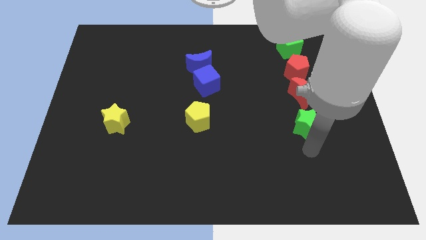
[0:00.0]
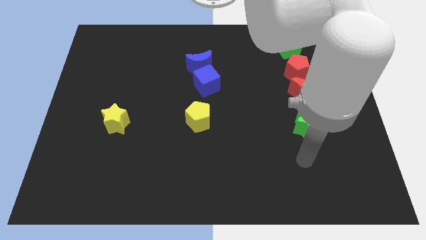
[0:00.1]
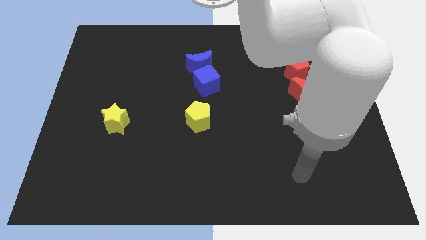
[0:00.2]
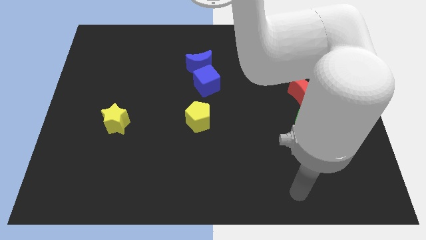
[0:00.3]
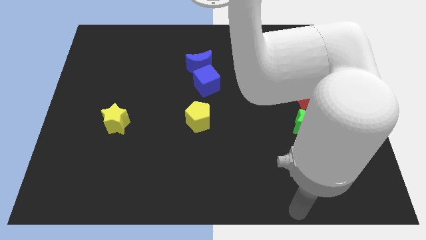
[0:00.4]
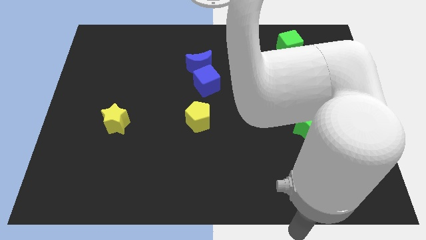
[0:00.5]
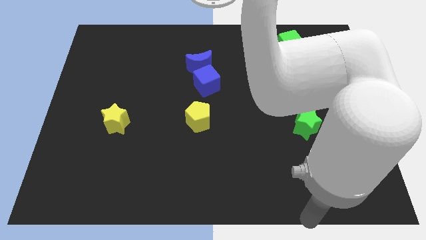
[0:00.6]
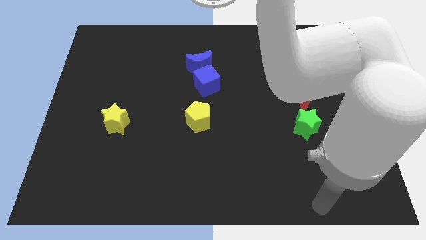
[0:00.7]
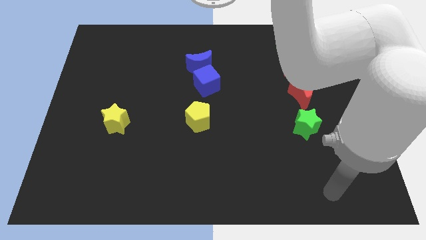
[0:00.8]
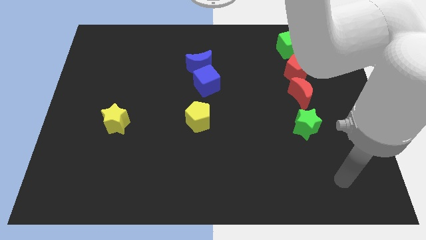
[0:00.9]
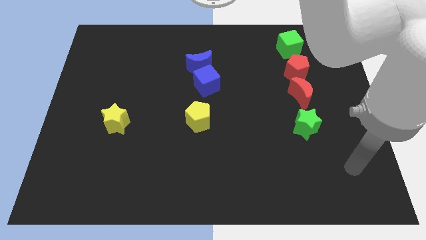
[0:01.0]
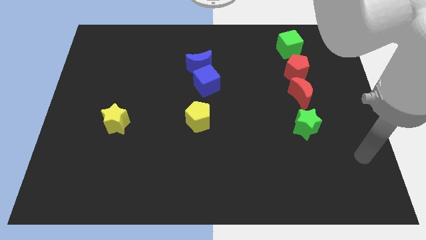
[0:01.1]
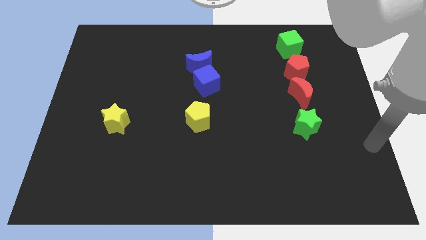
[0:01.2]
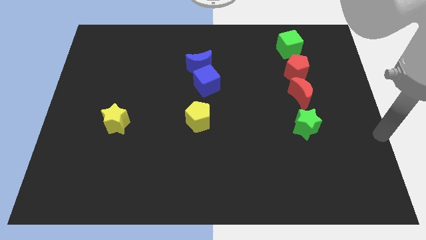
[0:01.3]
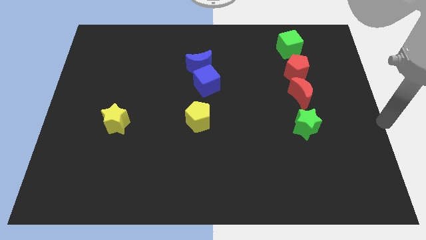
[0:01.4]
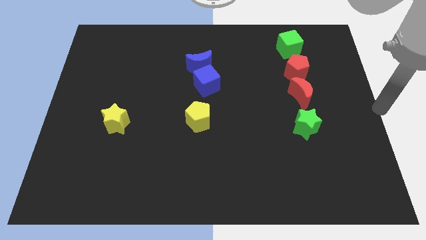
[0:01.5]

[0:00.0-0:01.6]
move your arm to center right

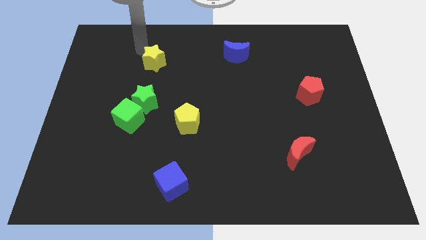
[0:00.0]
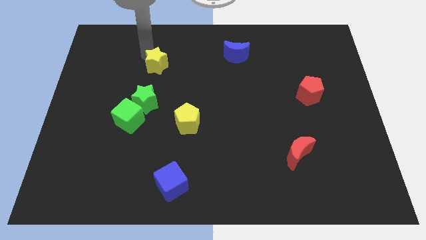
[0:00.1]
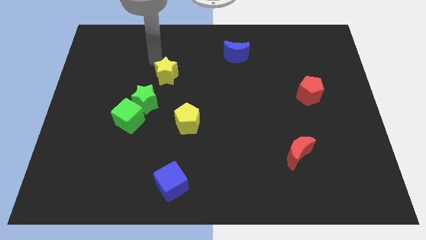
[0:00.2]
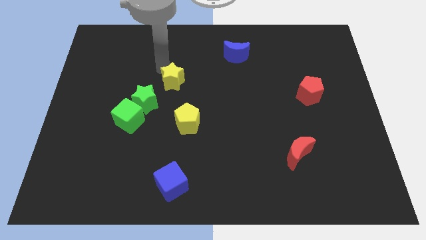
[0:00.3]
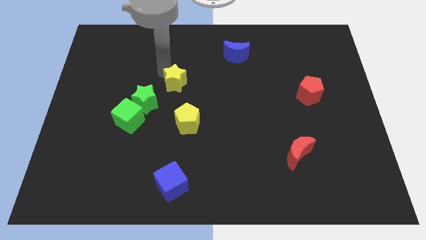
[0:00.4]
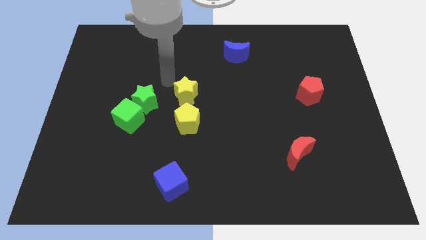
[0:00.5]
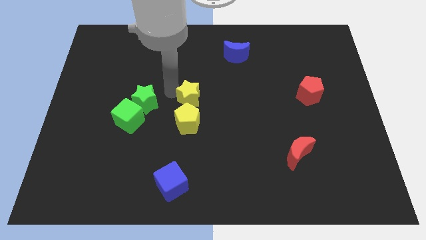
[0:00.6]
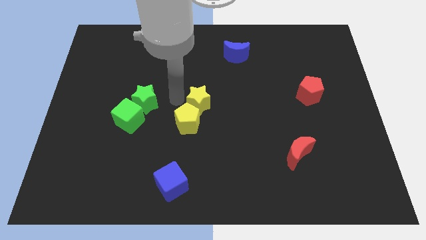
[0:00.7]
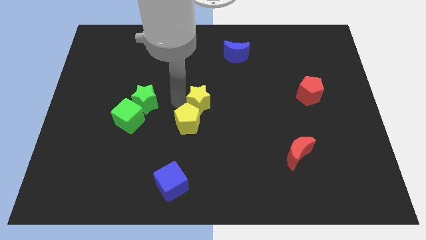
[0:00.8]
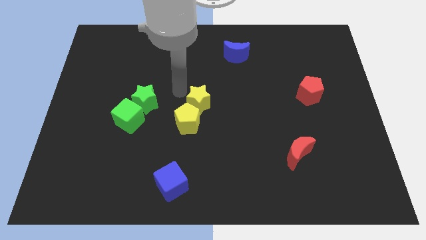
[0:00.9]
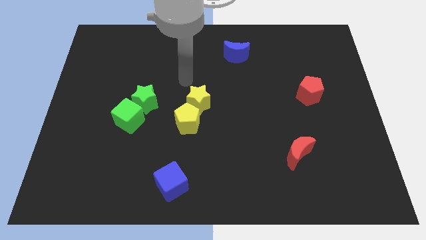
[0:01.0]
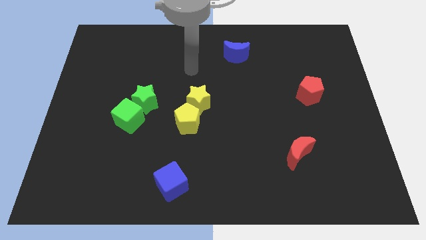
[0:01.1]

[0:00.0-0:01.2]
place the yellow star top right side of the yellow pentagon

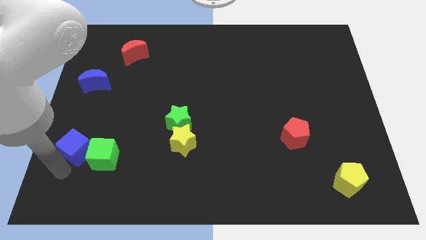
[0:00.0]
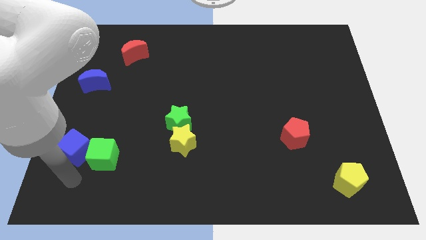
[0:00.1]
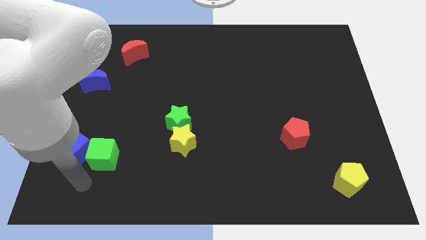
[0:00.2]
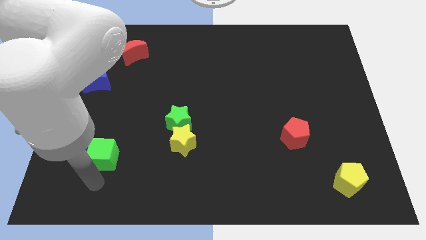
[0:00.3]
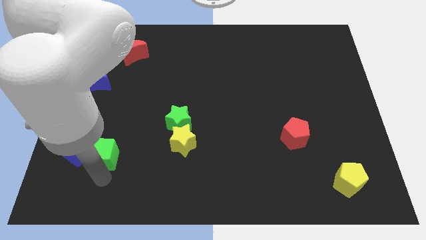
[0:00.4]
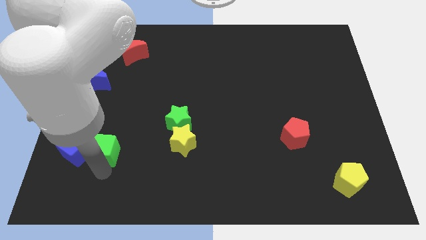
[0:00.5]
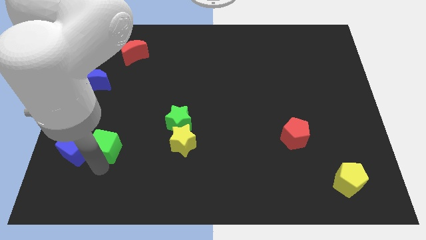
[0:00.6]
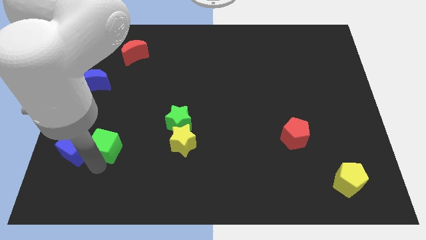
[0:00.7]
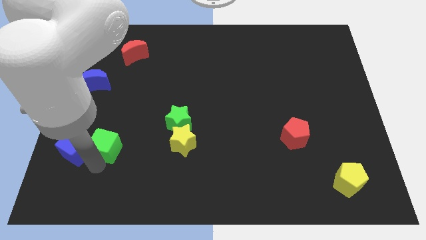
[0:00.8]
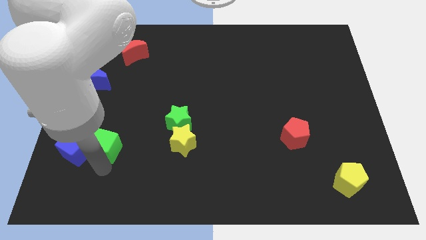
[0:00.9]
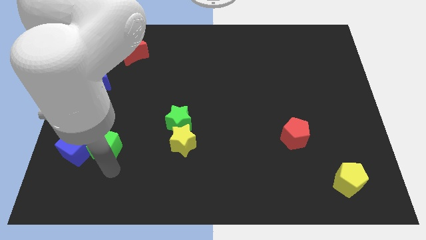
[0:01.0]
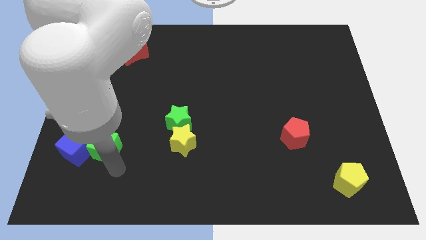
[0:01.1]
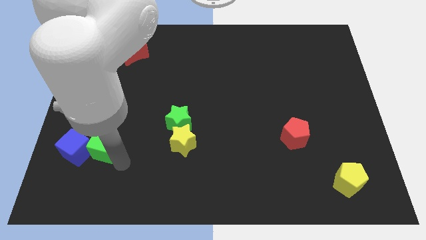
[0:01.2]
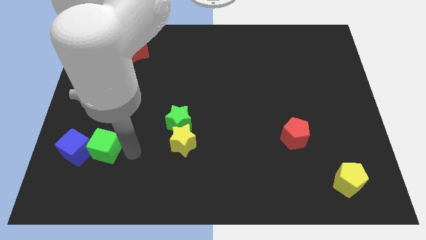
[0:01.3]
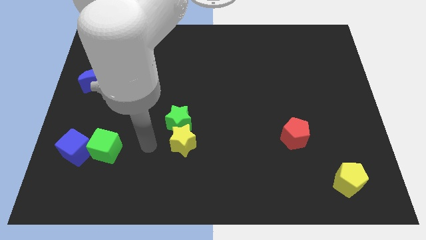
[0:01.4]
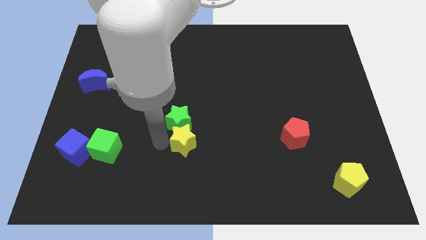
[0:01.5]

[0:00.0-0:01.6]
adjust the green cube into blue cube

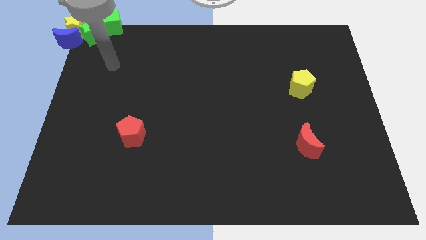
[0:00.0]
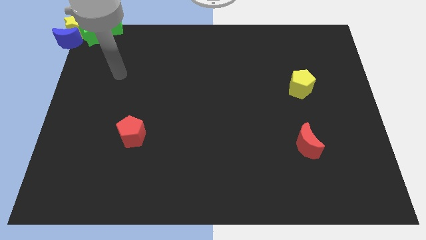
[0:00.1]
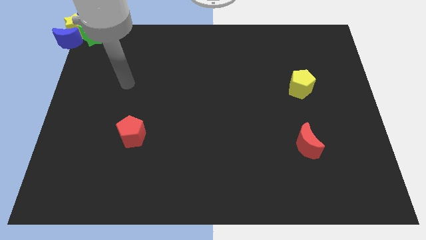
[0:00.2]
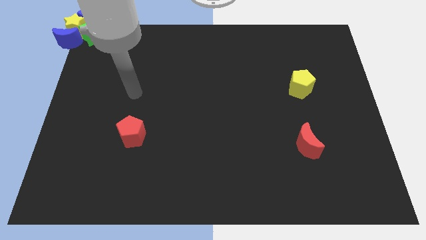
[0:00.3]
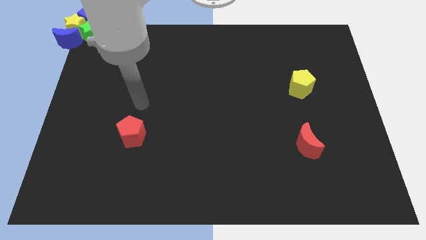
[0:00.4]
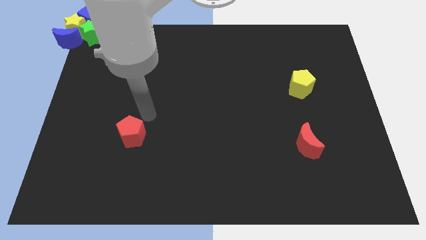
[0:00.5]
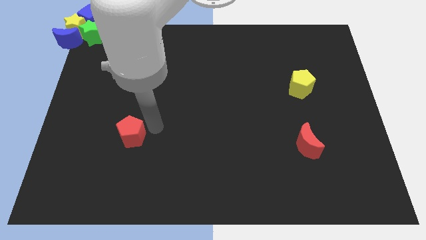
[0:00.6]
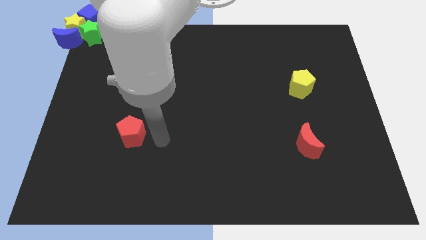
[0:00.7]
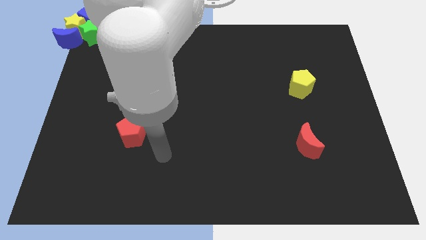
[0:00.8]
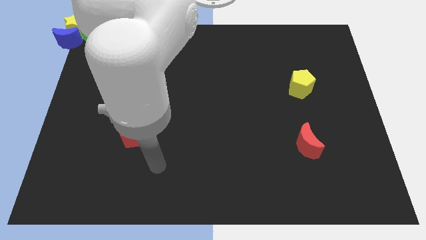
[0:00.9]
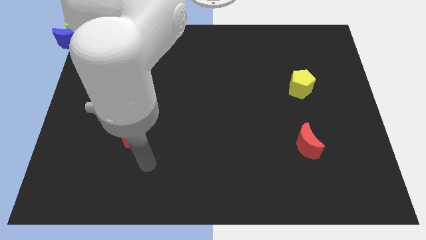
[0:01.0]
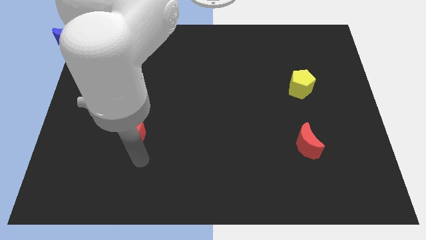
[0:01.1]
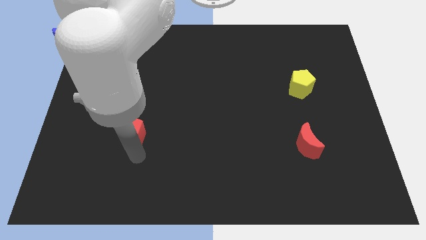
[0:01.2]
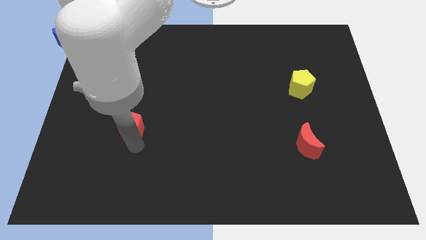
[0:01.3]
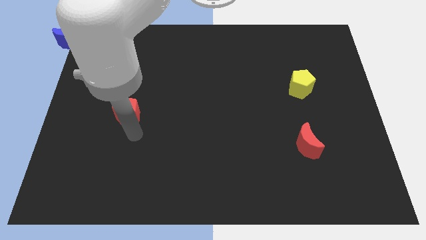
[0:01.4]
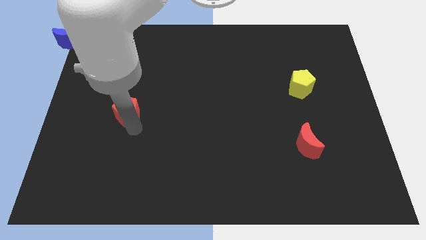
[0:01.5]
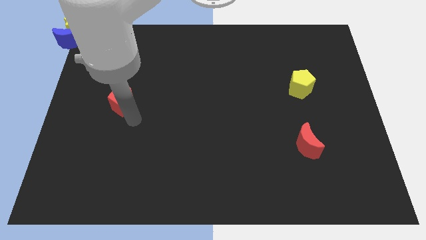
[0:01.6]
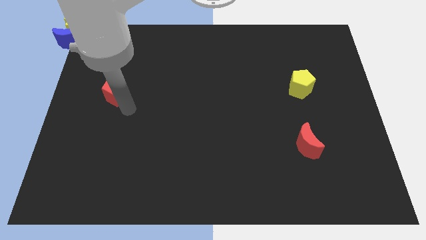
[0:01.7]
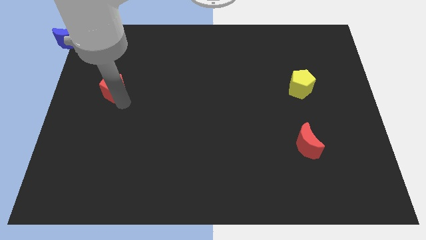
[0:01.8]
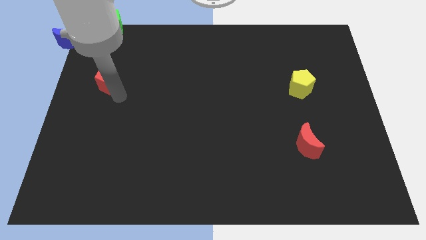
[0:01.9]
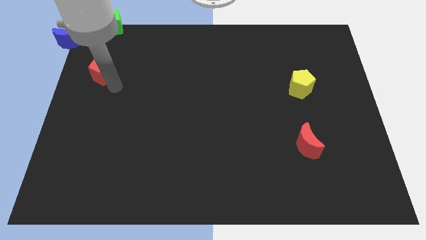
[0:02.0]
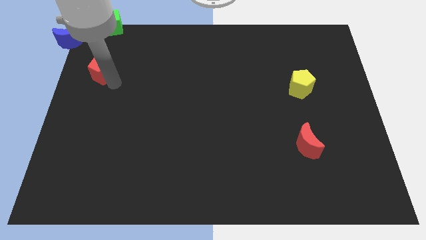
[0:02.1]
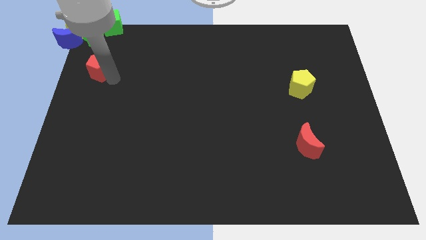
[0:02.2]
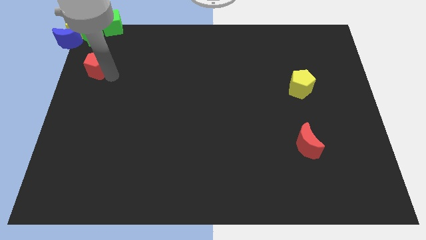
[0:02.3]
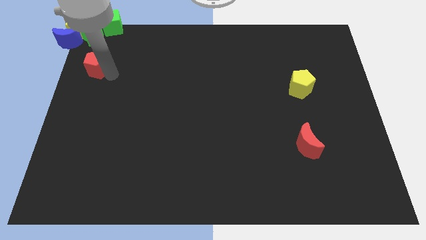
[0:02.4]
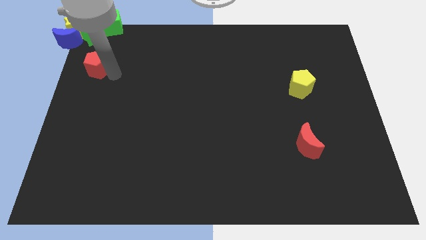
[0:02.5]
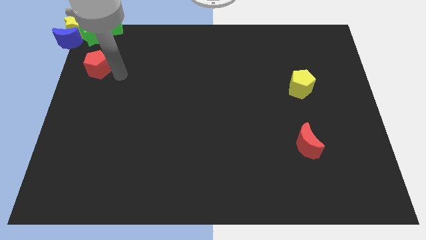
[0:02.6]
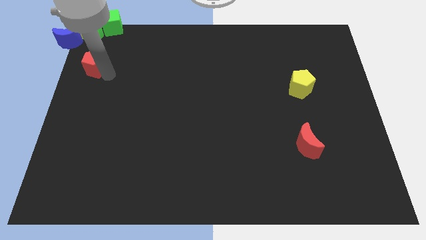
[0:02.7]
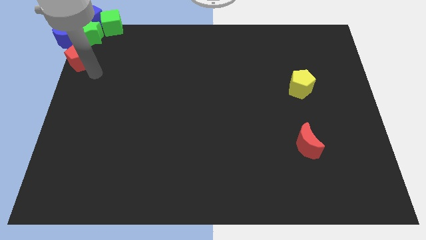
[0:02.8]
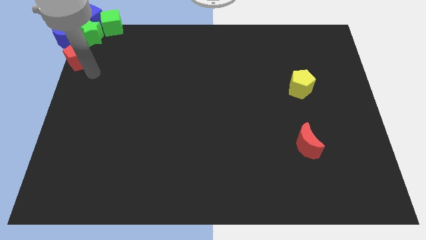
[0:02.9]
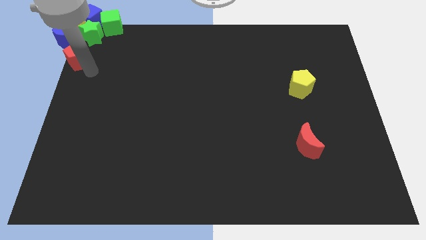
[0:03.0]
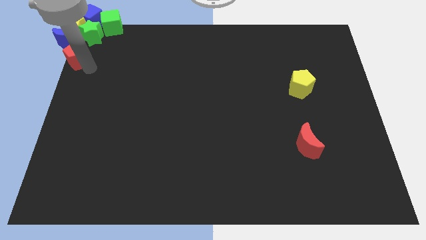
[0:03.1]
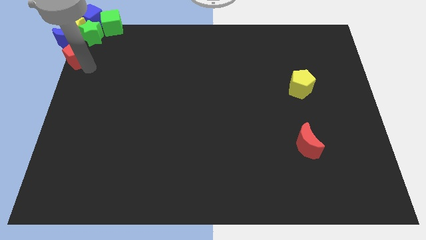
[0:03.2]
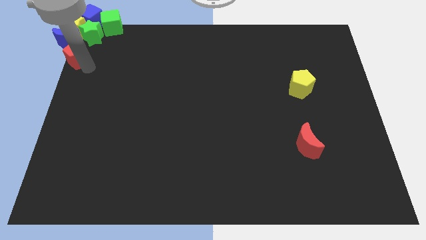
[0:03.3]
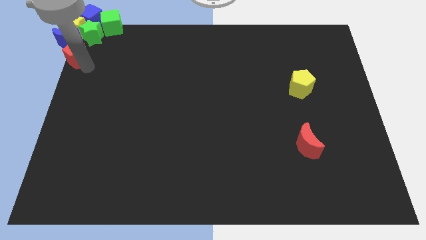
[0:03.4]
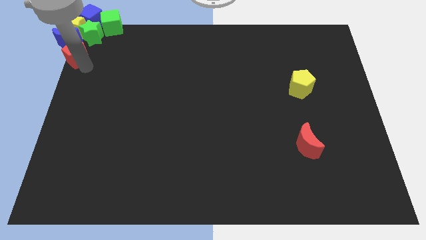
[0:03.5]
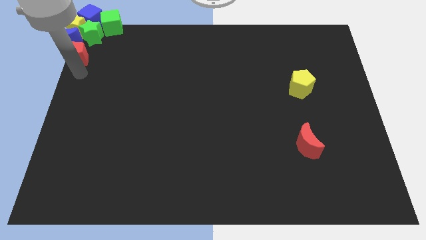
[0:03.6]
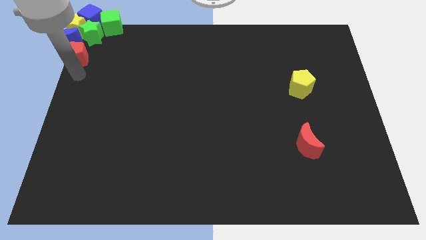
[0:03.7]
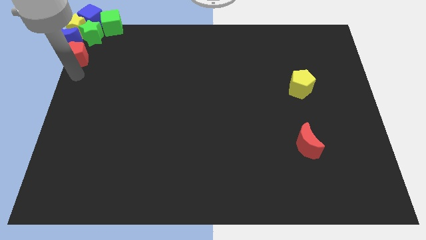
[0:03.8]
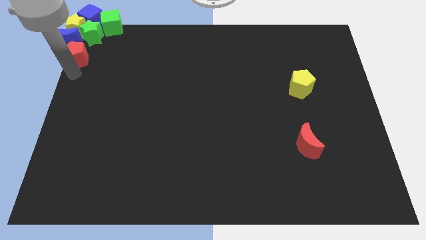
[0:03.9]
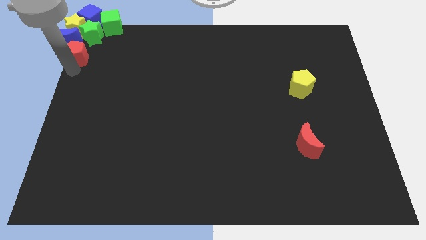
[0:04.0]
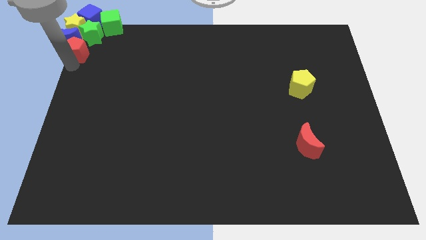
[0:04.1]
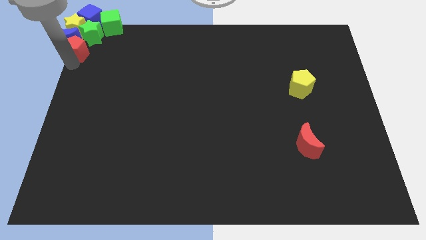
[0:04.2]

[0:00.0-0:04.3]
place the red pentagon below the blue crescent

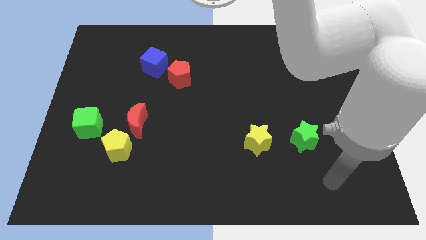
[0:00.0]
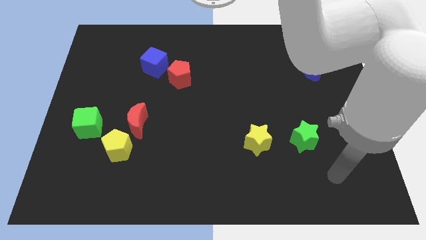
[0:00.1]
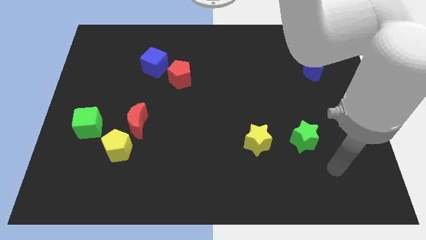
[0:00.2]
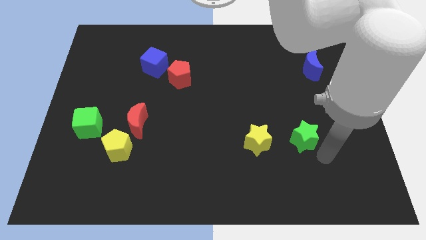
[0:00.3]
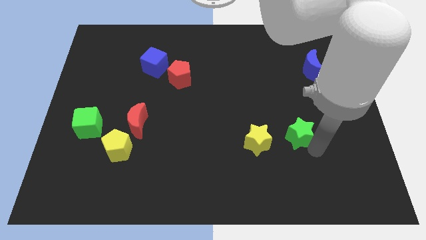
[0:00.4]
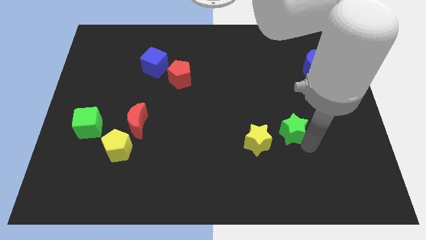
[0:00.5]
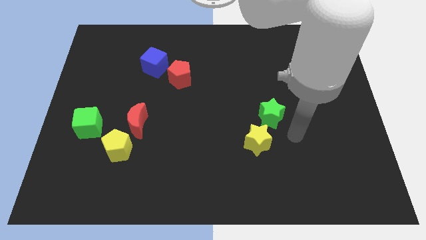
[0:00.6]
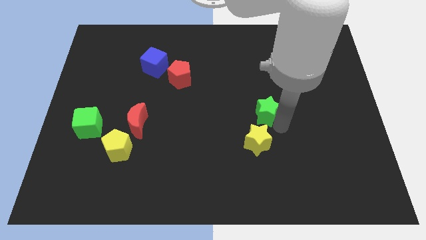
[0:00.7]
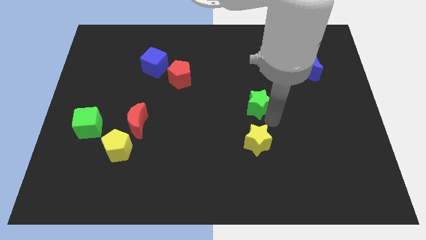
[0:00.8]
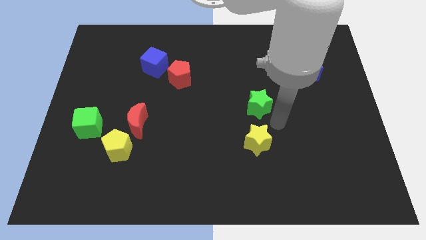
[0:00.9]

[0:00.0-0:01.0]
place green star above yellow star
